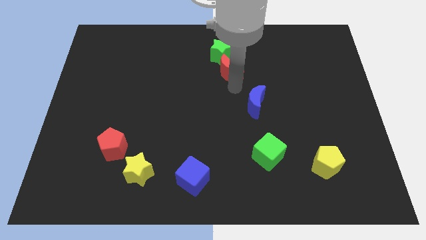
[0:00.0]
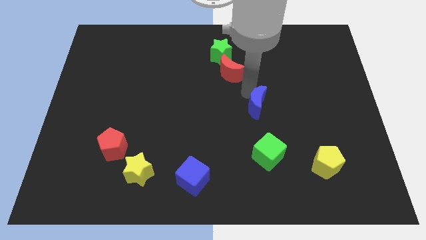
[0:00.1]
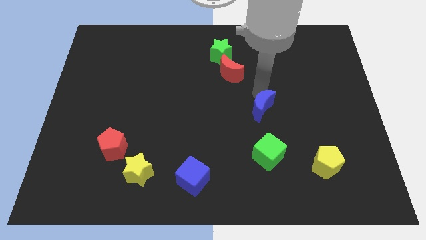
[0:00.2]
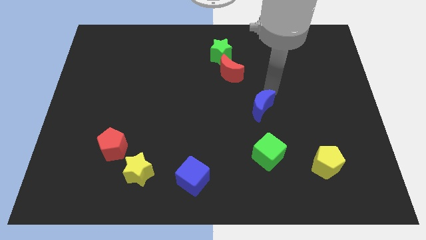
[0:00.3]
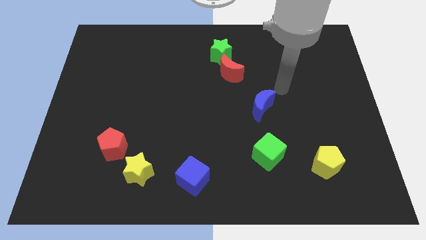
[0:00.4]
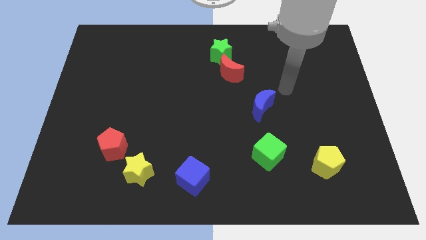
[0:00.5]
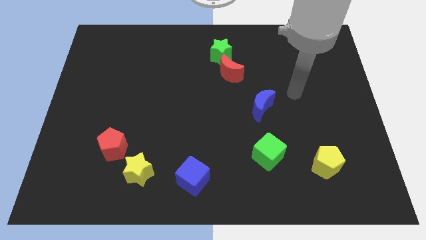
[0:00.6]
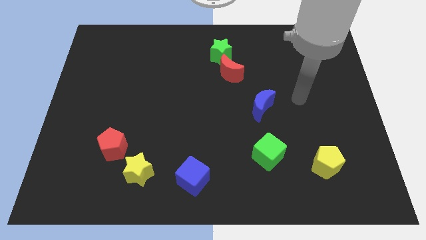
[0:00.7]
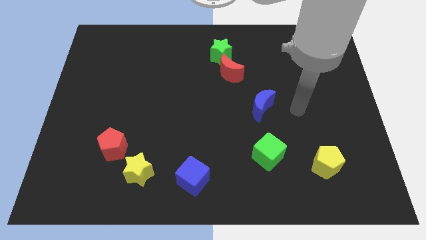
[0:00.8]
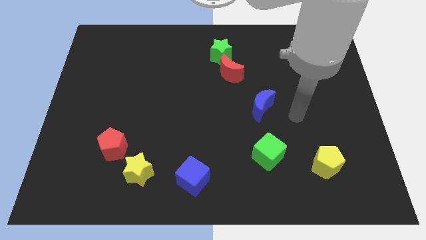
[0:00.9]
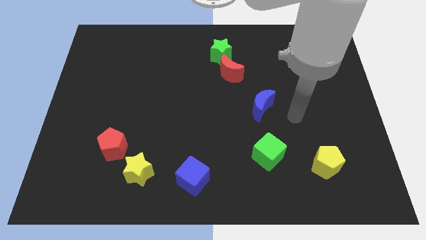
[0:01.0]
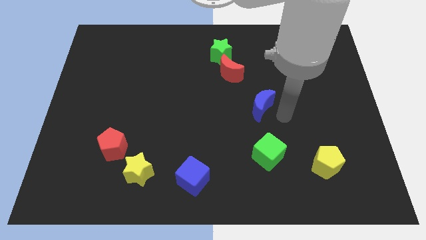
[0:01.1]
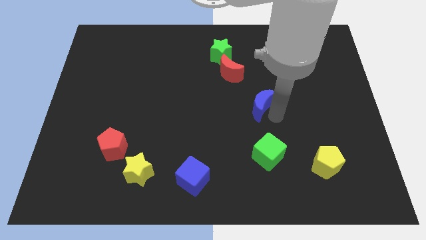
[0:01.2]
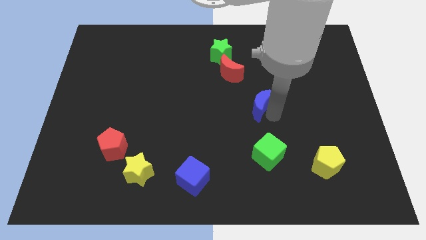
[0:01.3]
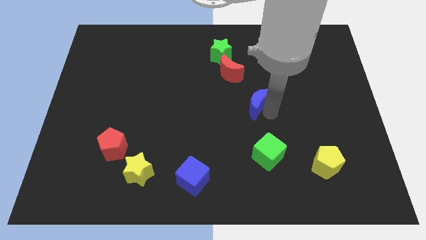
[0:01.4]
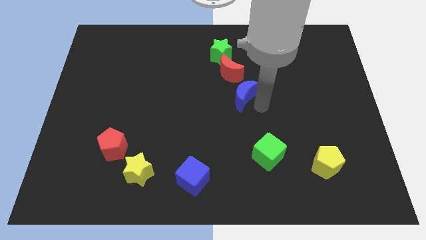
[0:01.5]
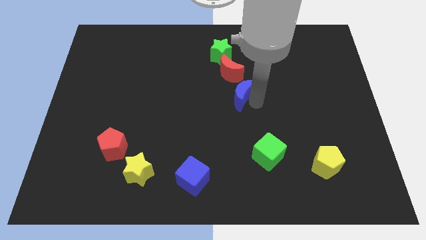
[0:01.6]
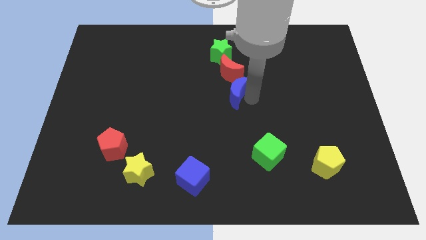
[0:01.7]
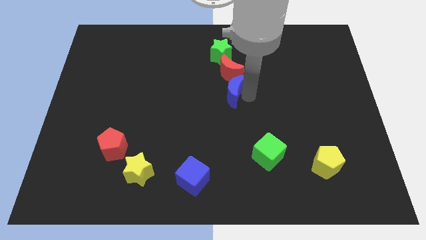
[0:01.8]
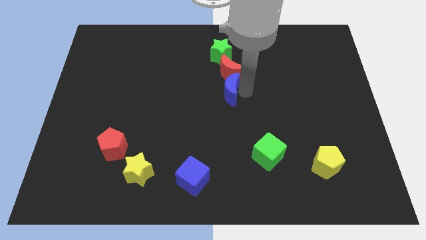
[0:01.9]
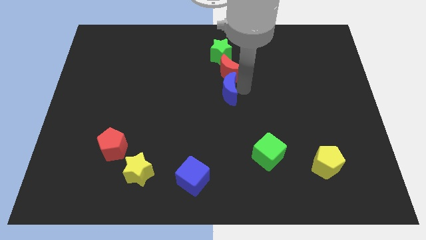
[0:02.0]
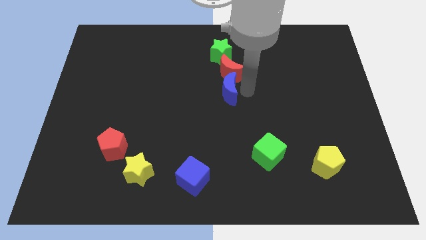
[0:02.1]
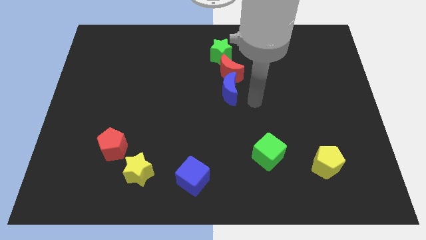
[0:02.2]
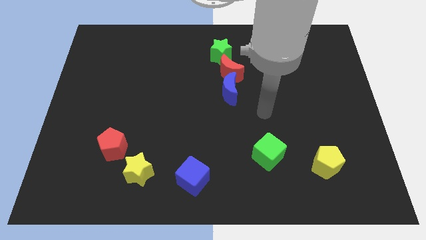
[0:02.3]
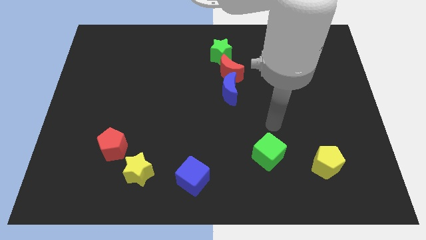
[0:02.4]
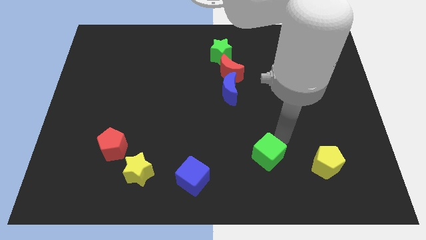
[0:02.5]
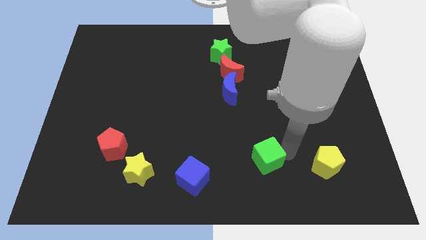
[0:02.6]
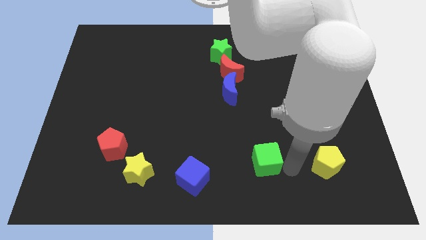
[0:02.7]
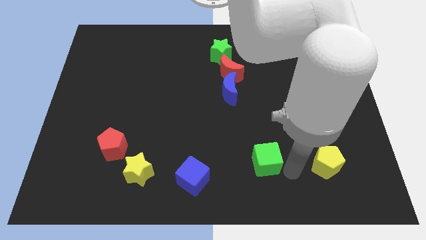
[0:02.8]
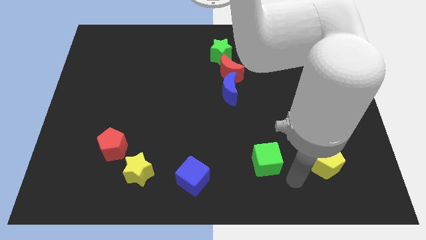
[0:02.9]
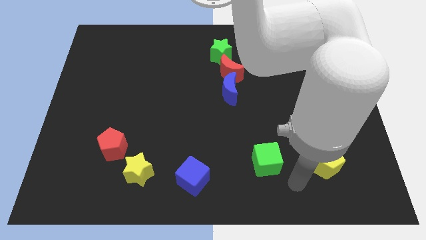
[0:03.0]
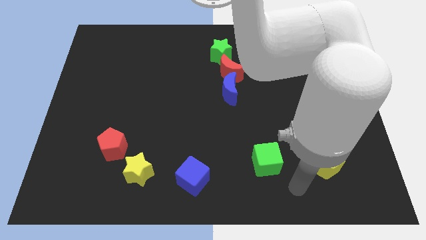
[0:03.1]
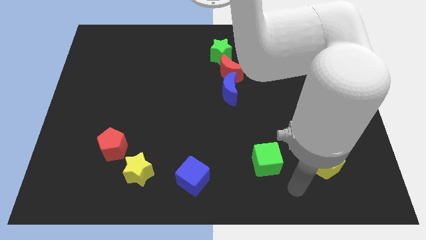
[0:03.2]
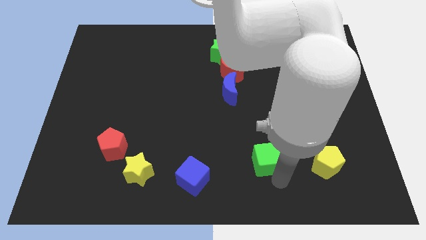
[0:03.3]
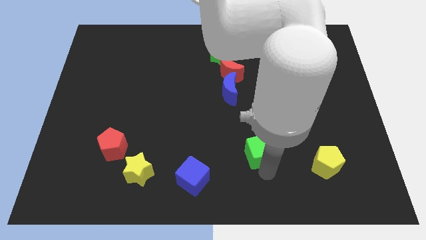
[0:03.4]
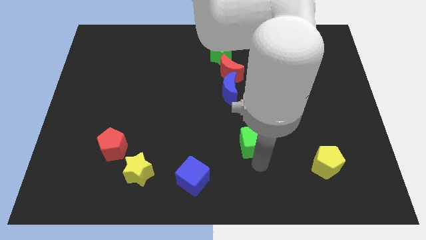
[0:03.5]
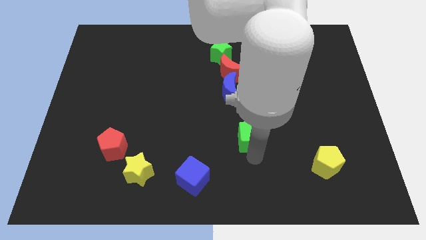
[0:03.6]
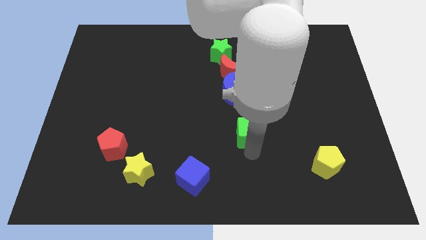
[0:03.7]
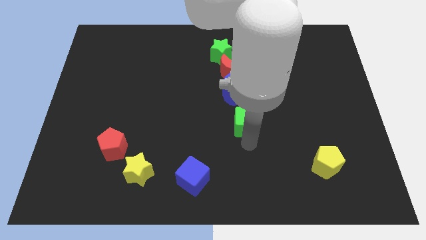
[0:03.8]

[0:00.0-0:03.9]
place the blue crescent and the green cube below the red crescent

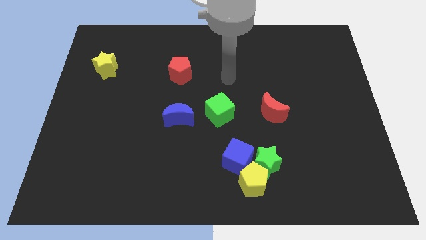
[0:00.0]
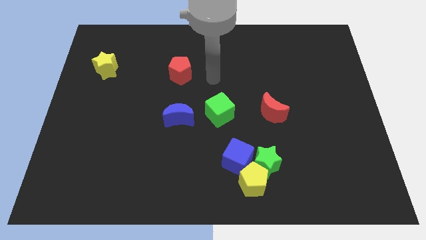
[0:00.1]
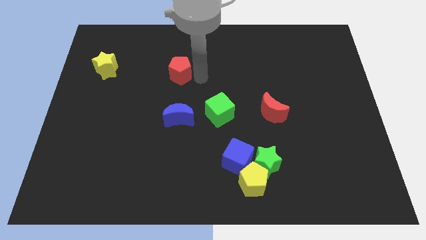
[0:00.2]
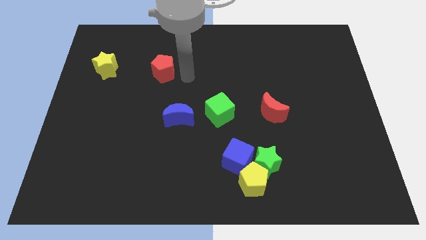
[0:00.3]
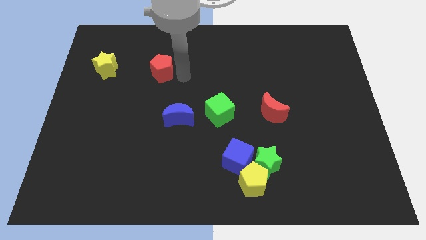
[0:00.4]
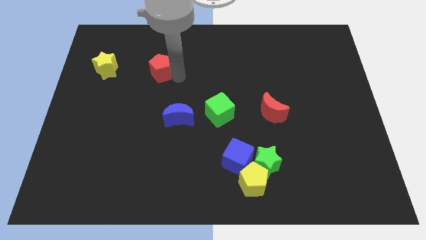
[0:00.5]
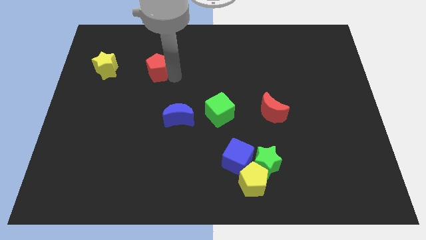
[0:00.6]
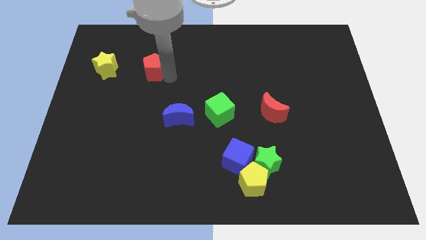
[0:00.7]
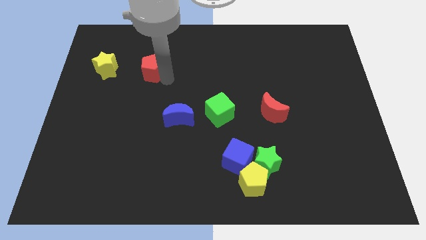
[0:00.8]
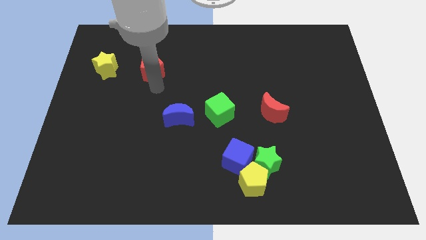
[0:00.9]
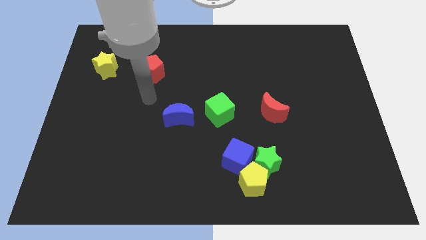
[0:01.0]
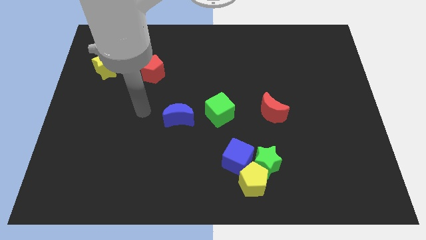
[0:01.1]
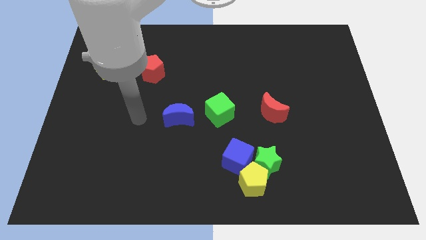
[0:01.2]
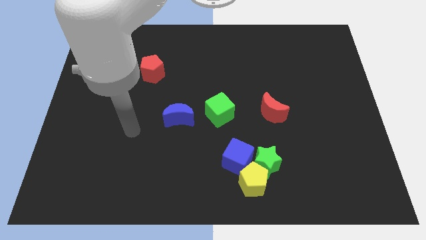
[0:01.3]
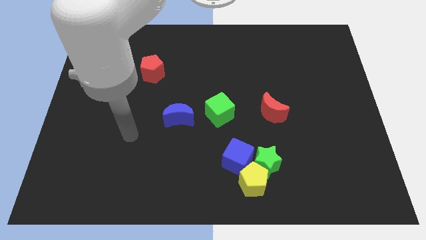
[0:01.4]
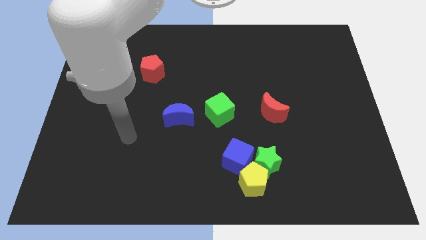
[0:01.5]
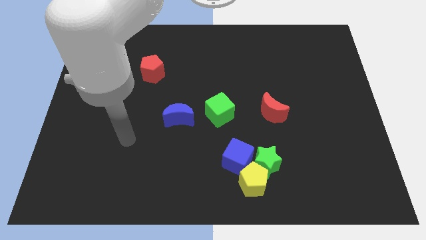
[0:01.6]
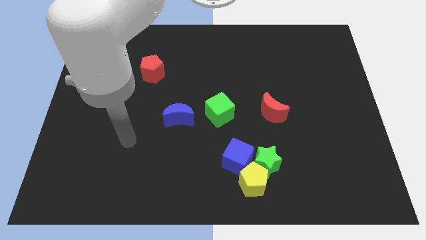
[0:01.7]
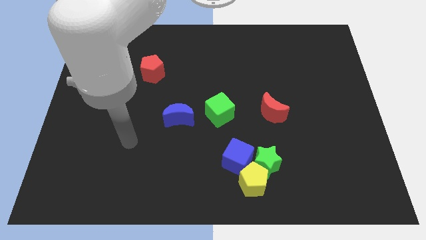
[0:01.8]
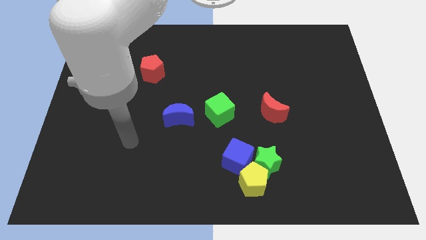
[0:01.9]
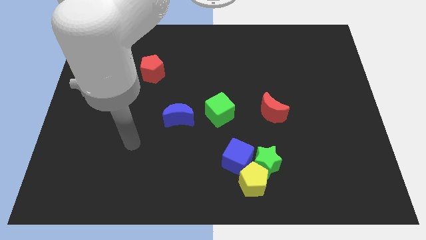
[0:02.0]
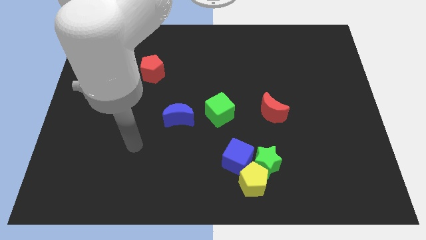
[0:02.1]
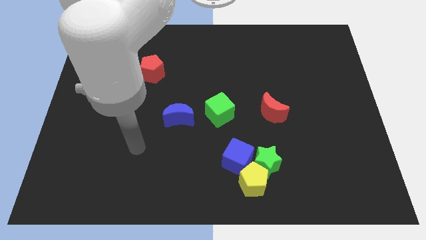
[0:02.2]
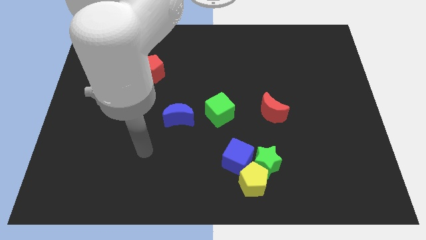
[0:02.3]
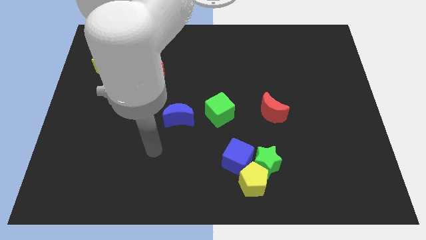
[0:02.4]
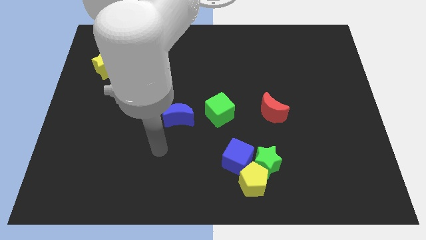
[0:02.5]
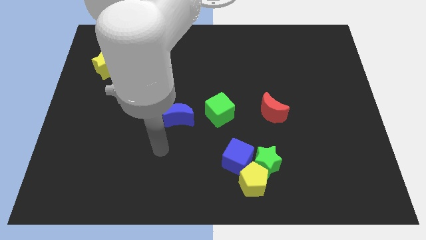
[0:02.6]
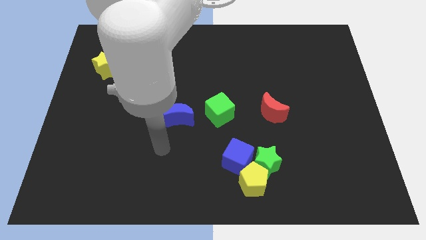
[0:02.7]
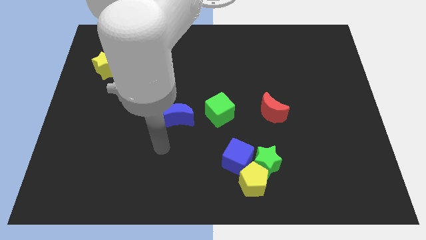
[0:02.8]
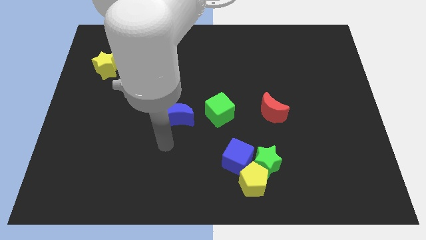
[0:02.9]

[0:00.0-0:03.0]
slightly push the red pentagon and move away

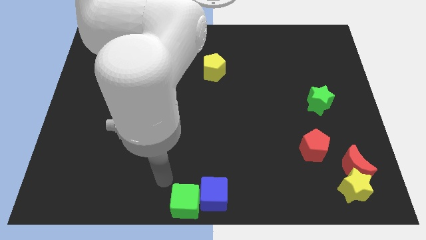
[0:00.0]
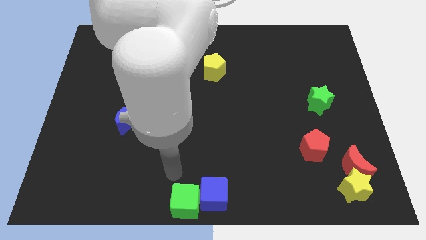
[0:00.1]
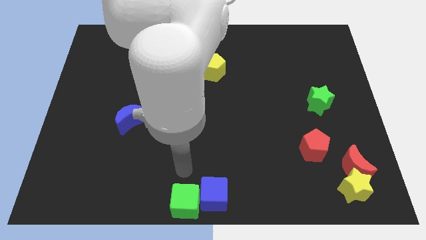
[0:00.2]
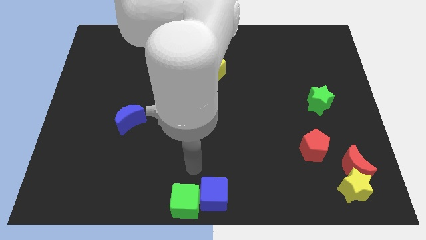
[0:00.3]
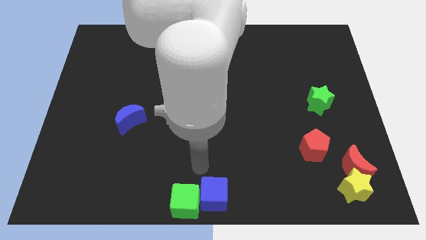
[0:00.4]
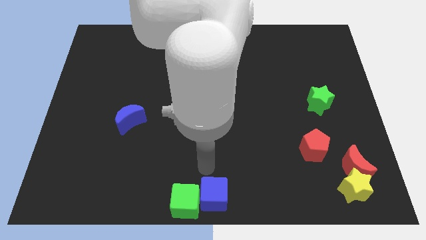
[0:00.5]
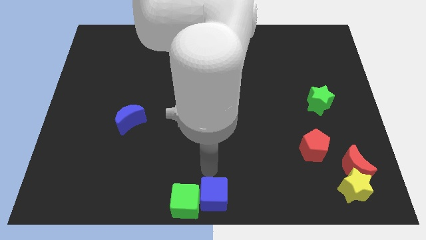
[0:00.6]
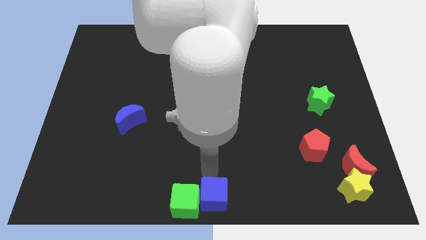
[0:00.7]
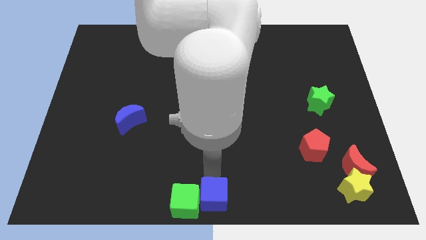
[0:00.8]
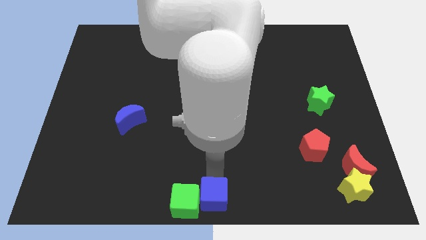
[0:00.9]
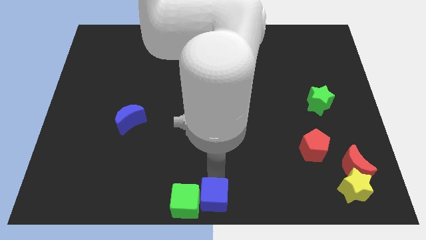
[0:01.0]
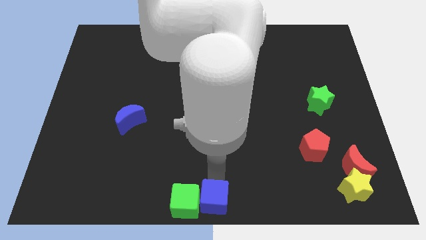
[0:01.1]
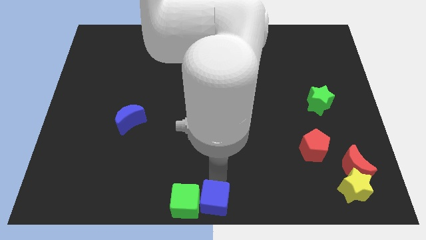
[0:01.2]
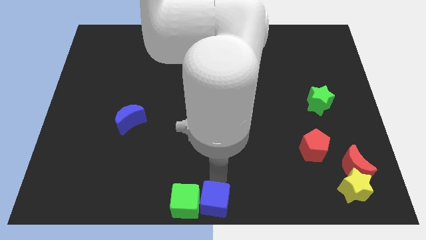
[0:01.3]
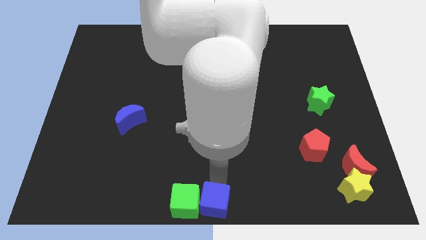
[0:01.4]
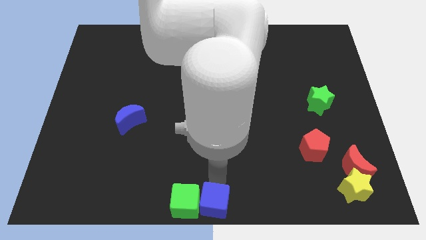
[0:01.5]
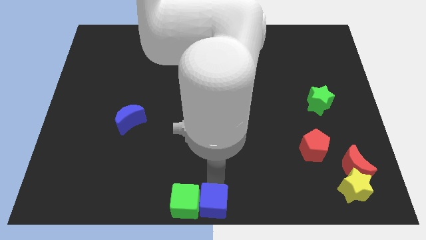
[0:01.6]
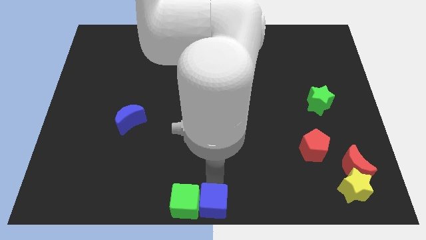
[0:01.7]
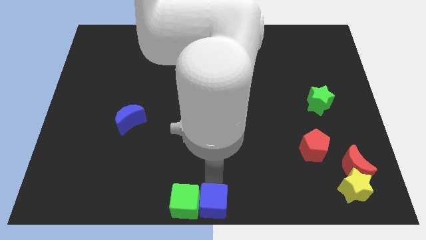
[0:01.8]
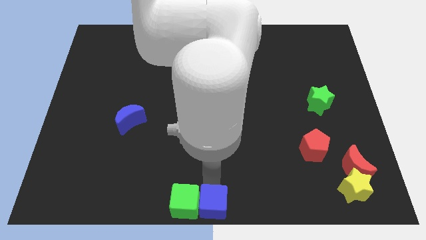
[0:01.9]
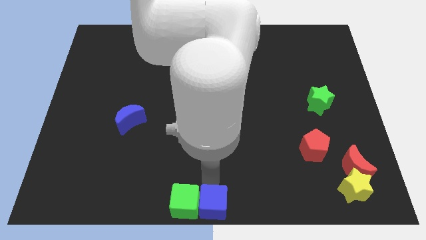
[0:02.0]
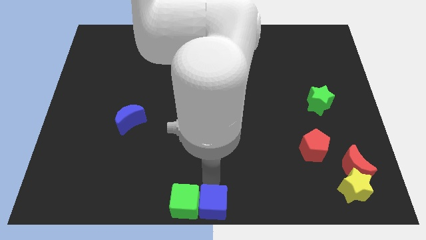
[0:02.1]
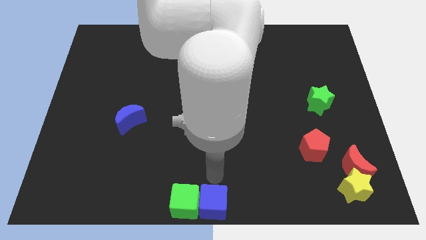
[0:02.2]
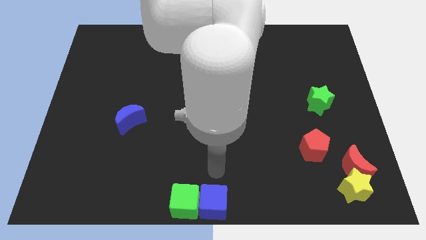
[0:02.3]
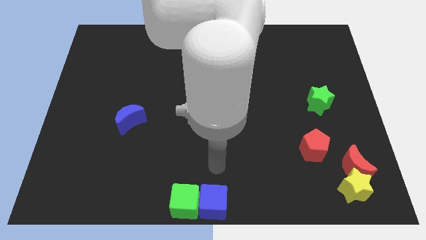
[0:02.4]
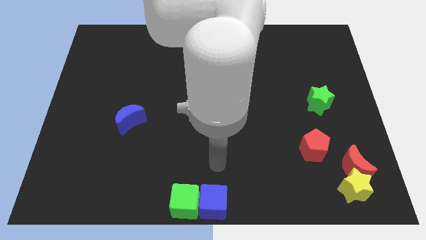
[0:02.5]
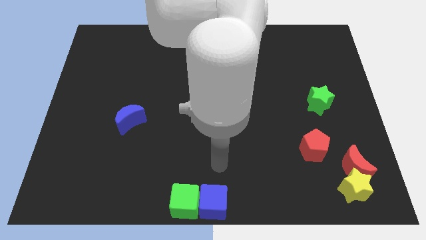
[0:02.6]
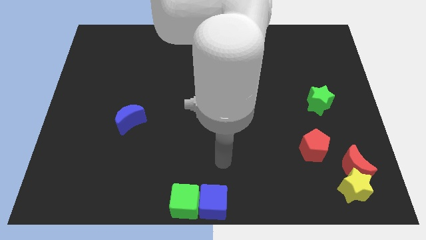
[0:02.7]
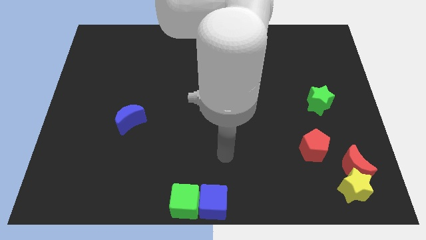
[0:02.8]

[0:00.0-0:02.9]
point your arm away from blue cube
